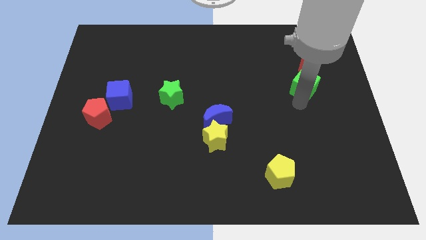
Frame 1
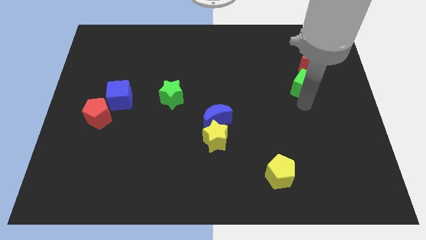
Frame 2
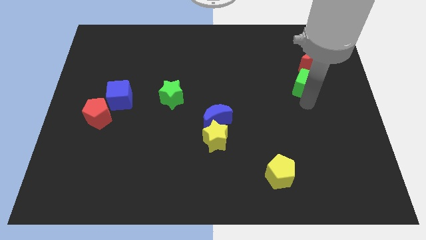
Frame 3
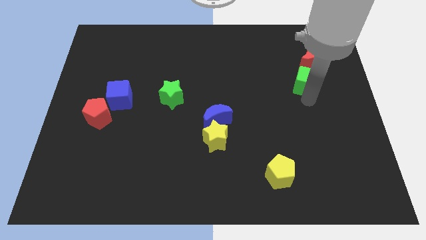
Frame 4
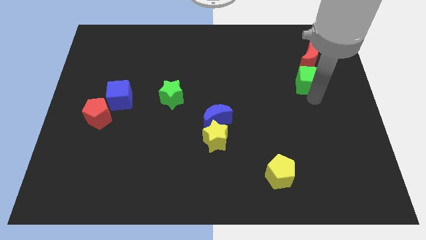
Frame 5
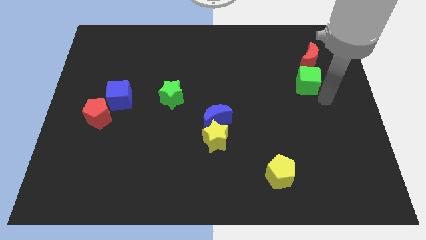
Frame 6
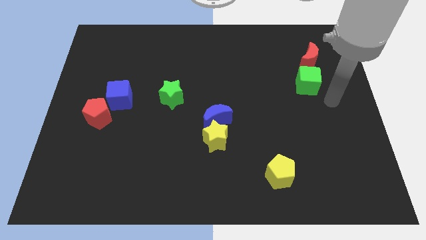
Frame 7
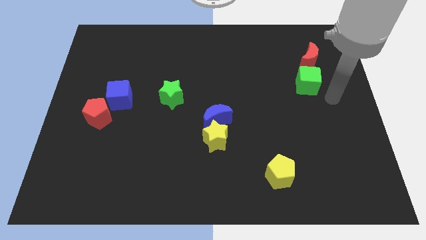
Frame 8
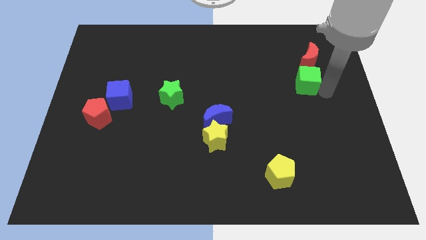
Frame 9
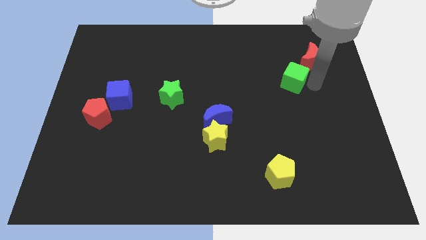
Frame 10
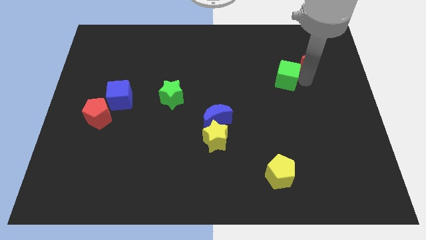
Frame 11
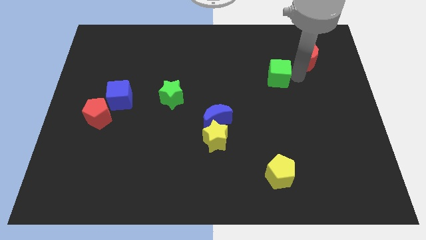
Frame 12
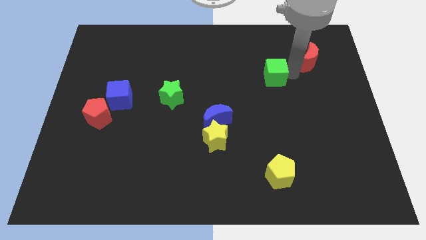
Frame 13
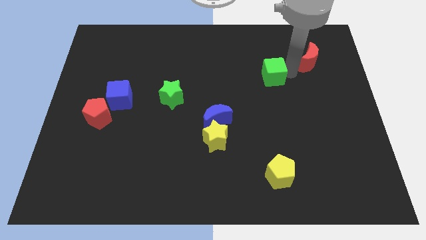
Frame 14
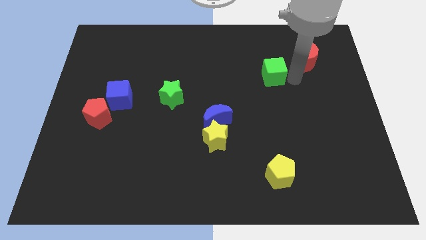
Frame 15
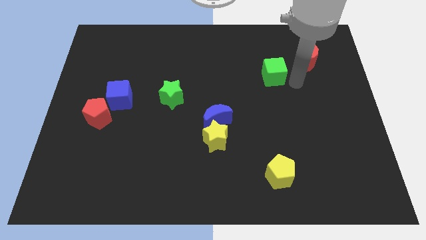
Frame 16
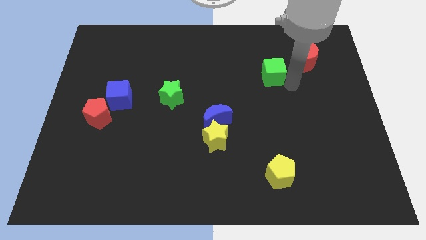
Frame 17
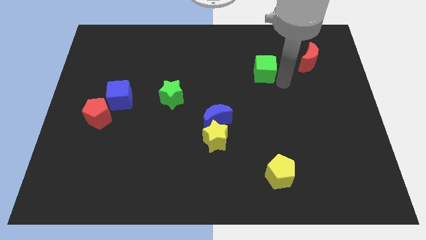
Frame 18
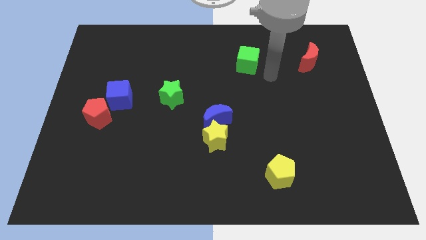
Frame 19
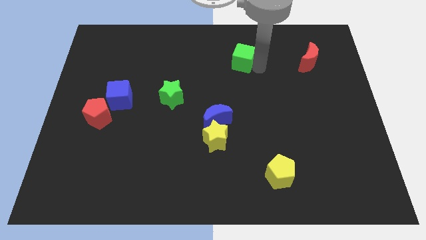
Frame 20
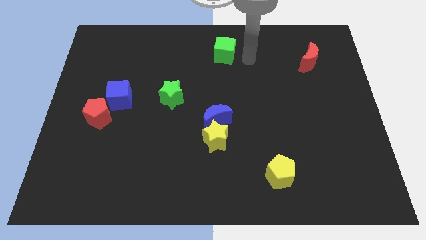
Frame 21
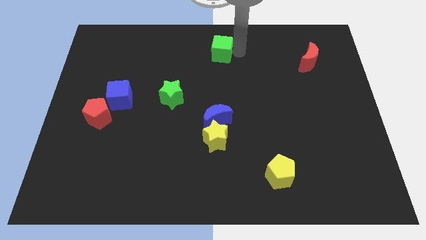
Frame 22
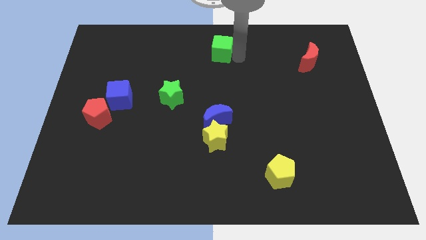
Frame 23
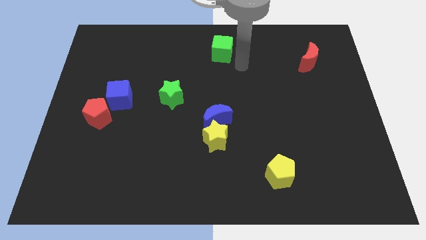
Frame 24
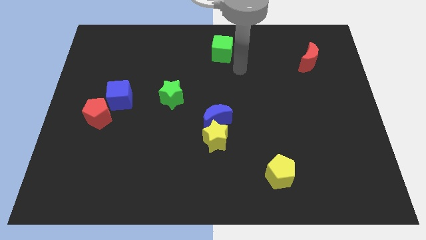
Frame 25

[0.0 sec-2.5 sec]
place the green cube diagonal to the green star

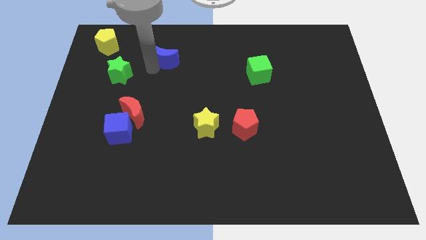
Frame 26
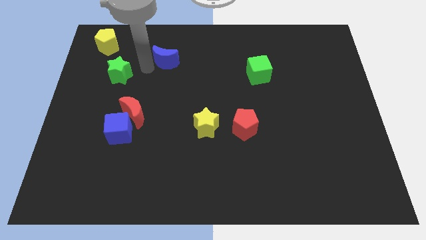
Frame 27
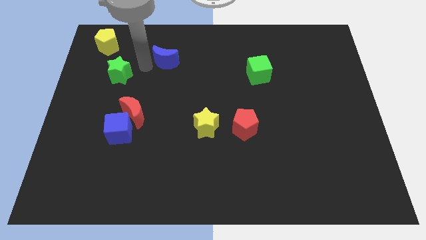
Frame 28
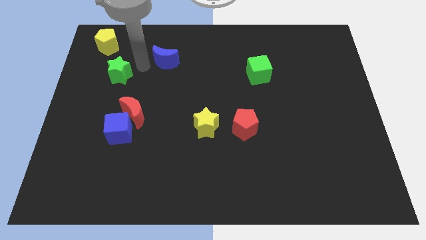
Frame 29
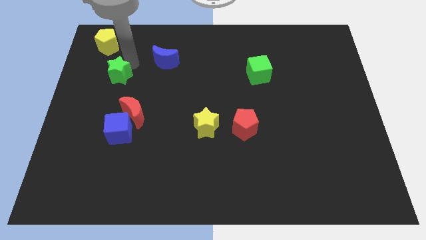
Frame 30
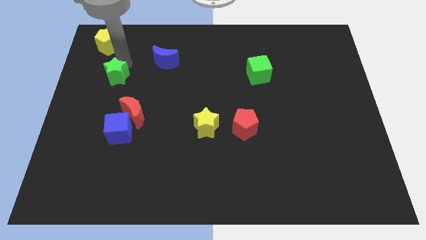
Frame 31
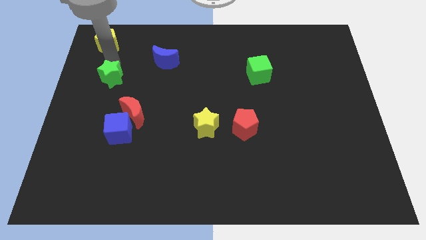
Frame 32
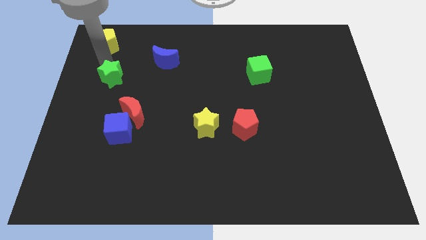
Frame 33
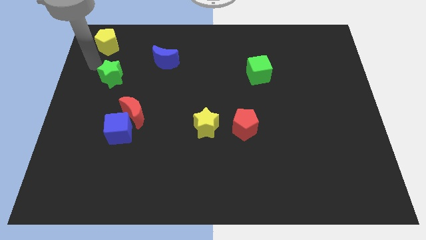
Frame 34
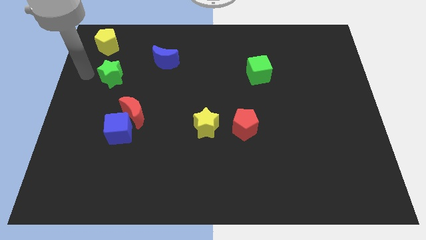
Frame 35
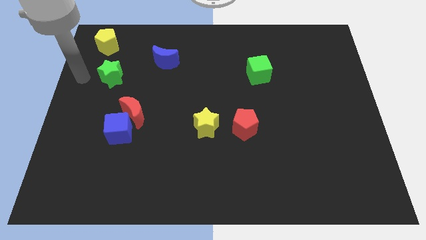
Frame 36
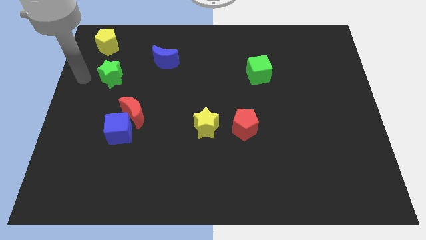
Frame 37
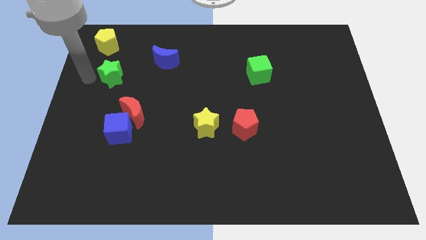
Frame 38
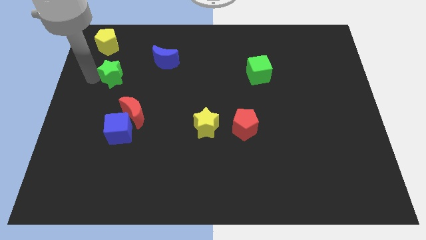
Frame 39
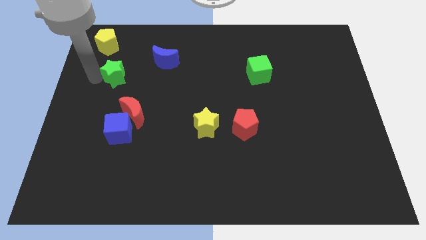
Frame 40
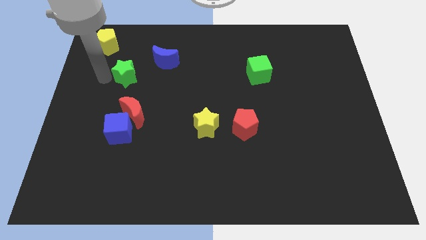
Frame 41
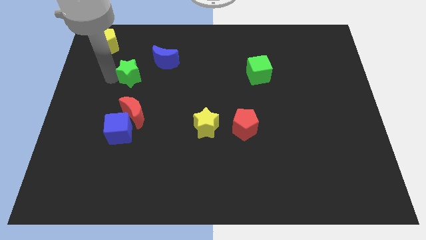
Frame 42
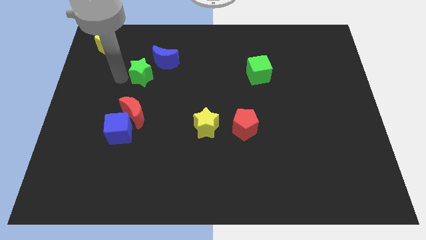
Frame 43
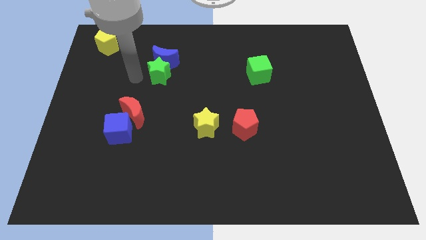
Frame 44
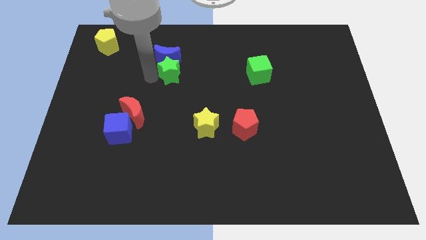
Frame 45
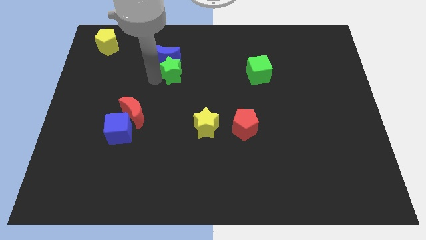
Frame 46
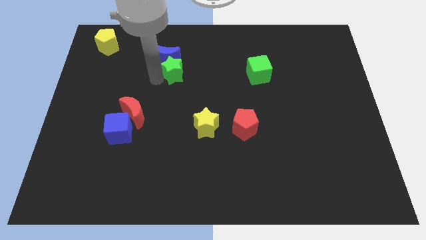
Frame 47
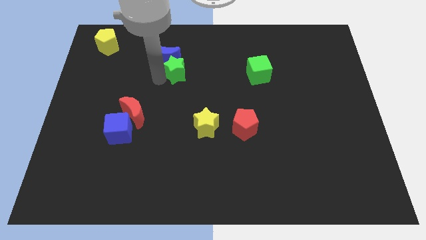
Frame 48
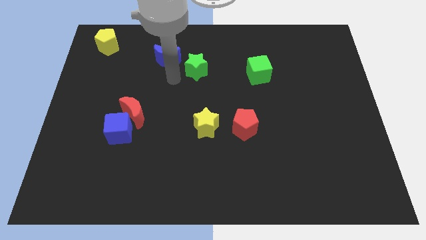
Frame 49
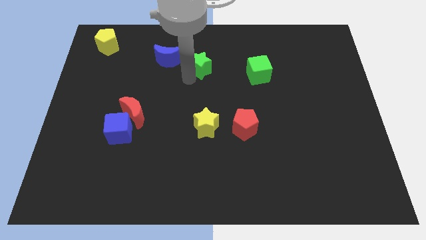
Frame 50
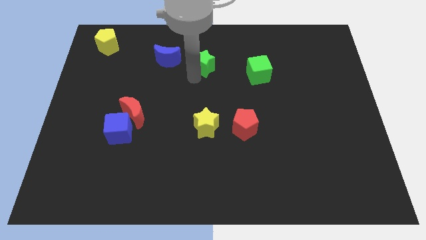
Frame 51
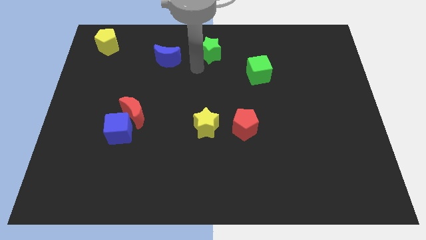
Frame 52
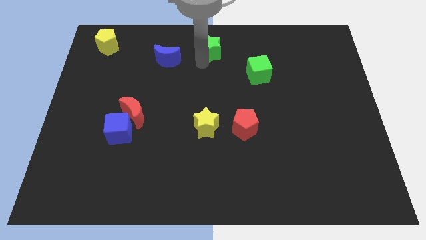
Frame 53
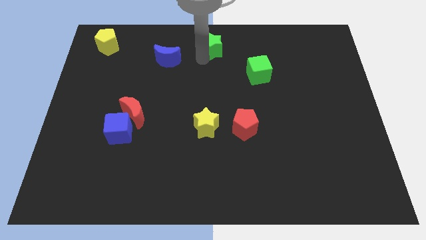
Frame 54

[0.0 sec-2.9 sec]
move the green star to the right of the blue crescent

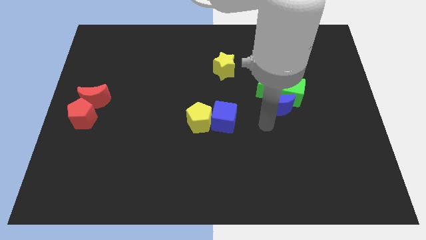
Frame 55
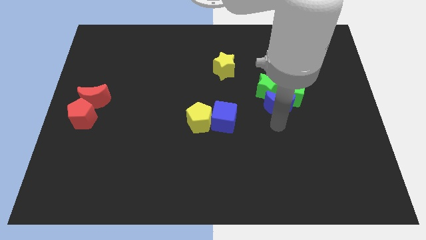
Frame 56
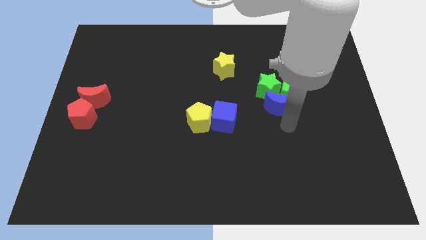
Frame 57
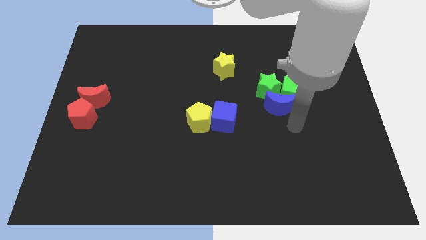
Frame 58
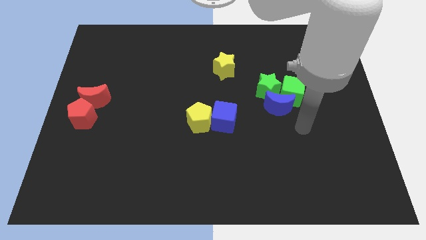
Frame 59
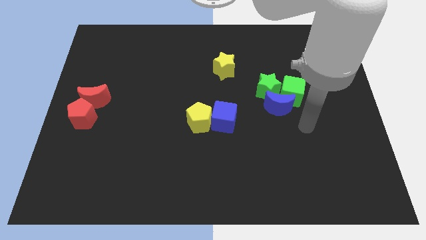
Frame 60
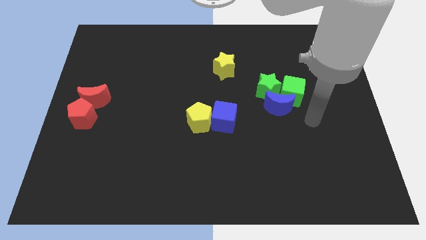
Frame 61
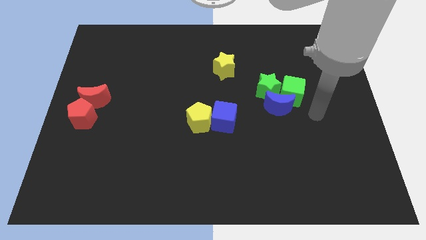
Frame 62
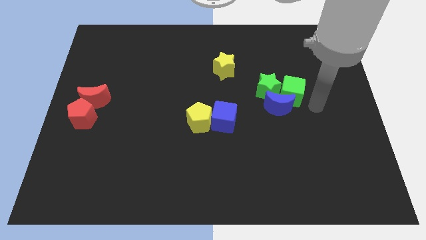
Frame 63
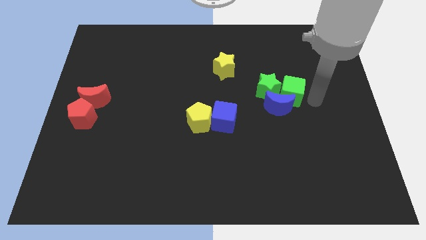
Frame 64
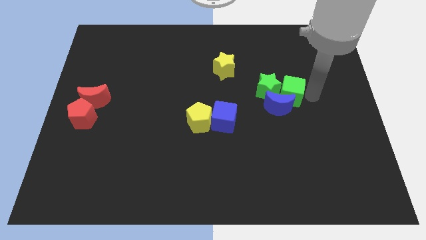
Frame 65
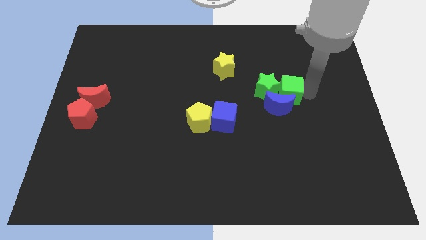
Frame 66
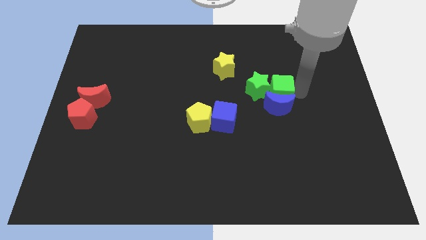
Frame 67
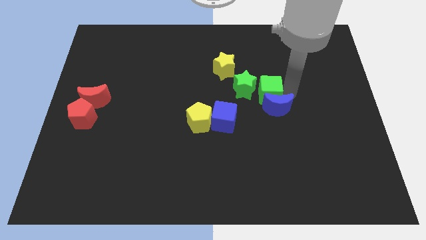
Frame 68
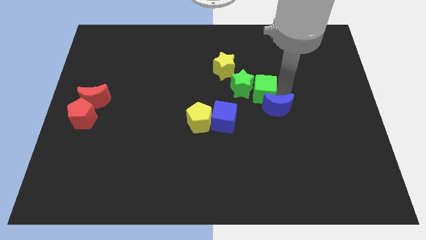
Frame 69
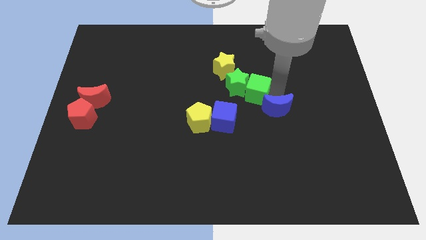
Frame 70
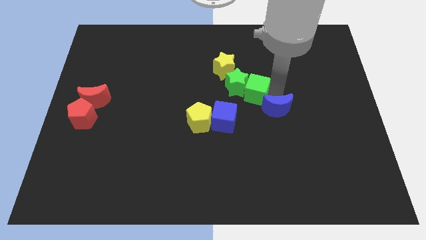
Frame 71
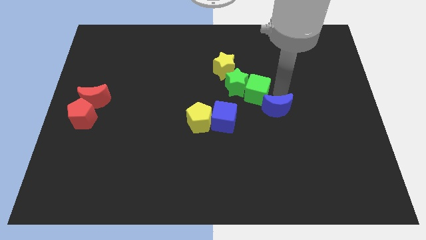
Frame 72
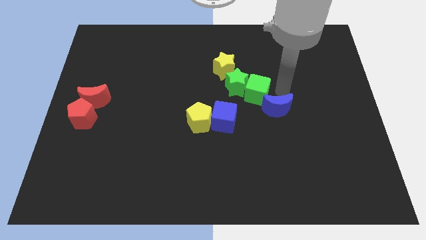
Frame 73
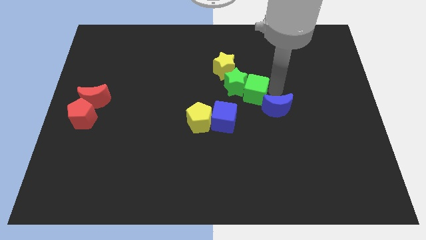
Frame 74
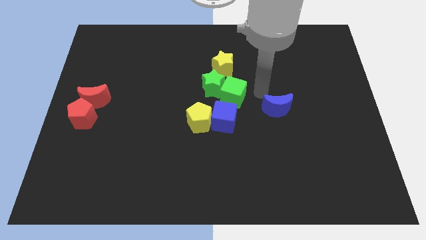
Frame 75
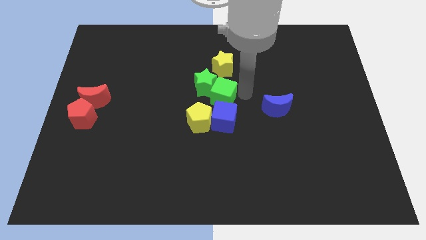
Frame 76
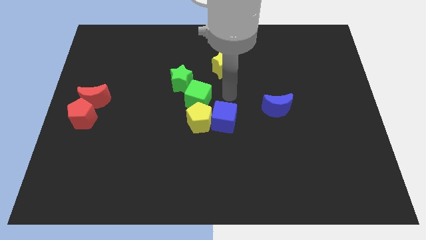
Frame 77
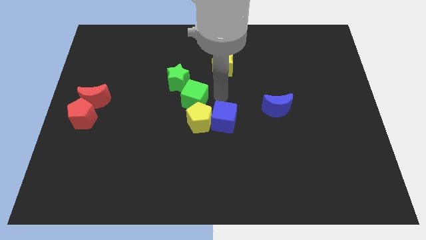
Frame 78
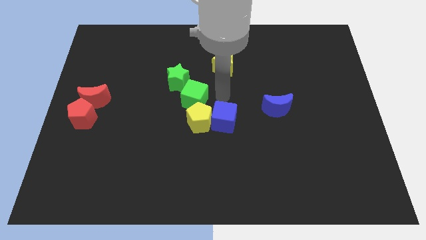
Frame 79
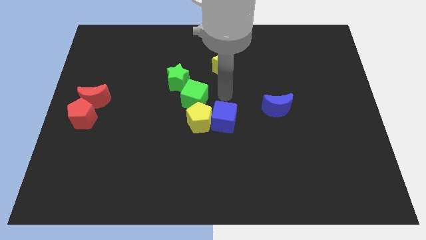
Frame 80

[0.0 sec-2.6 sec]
push the green cube into the green star towards the left

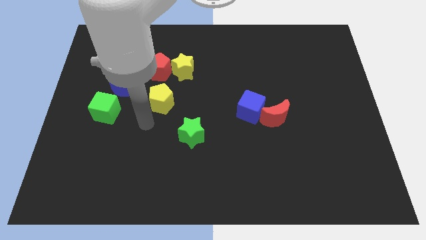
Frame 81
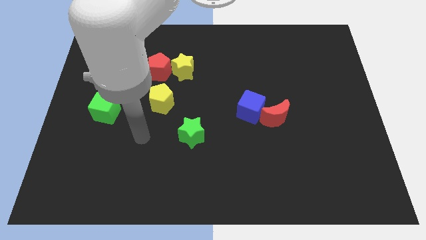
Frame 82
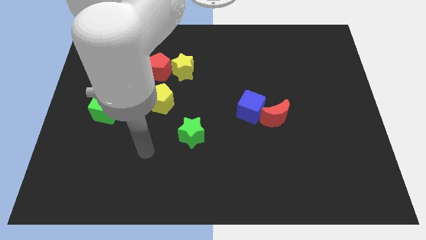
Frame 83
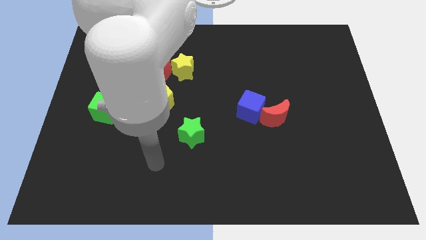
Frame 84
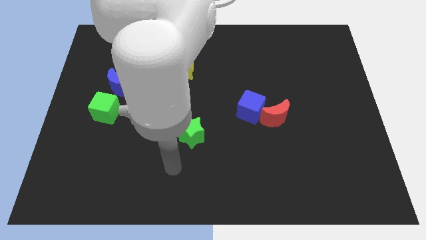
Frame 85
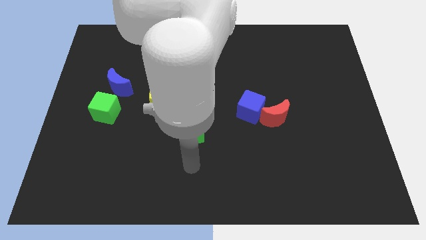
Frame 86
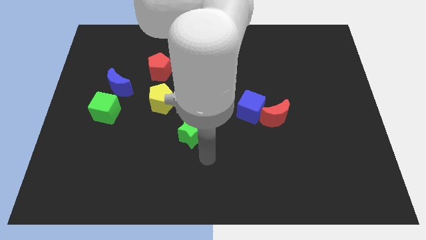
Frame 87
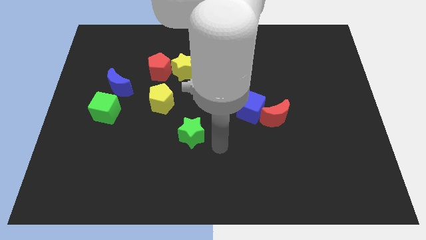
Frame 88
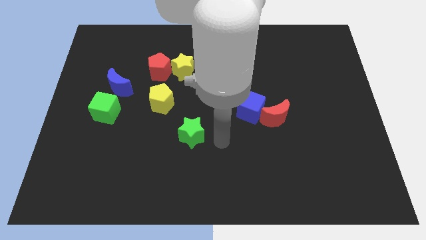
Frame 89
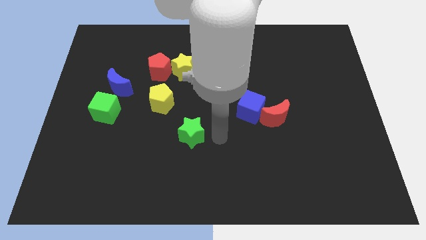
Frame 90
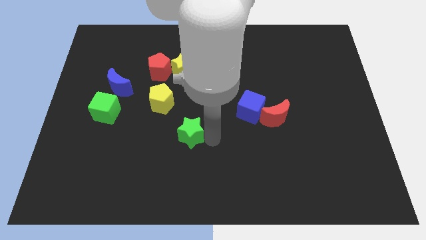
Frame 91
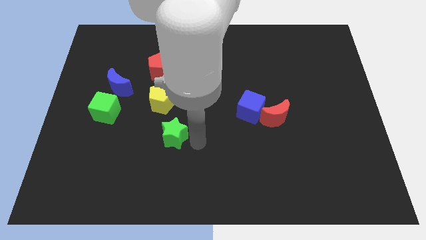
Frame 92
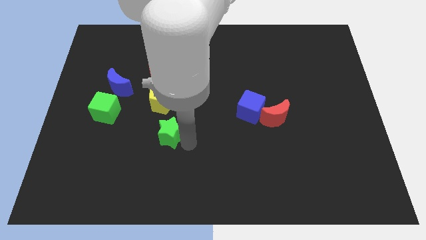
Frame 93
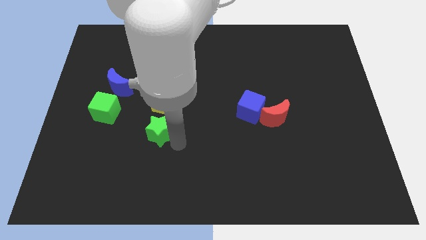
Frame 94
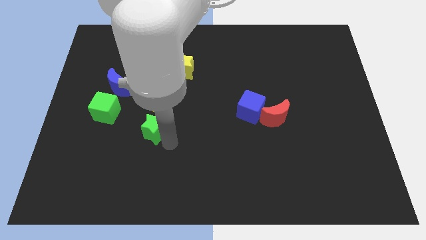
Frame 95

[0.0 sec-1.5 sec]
place the green star below the yellow pentagon
